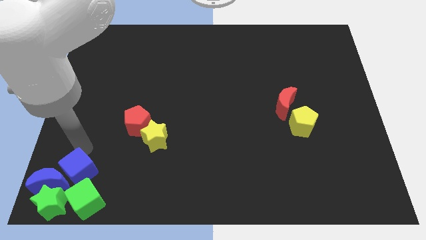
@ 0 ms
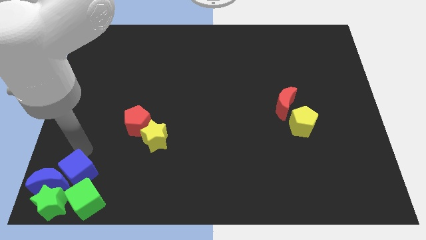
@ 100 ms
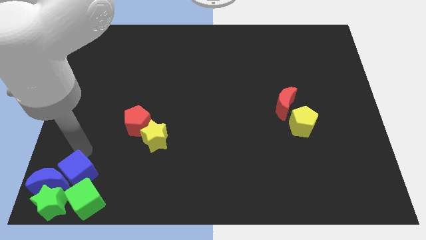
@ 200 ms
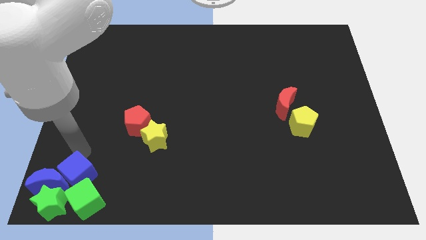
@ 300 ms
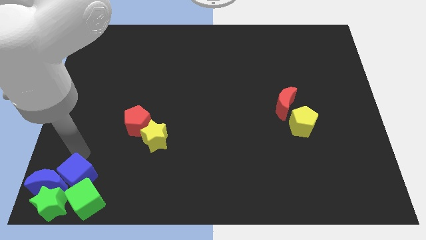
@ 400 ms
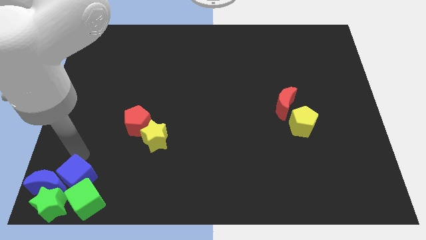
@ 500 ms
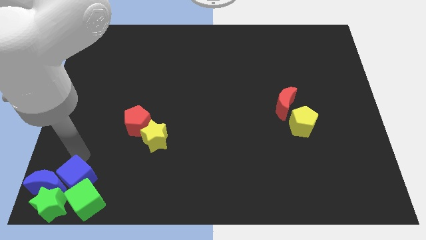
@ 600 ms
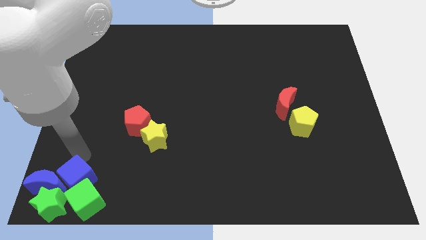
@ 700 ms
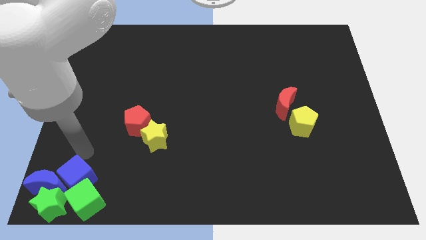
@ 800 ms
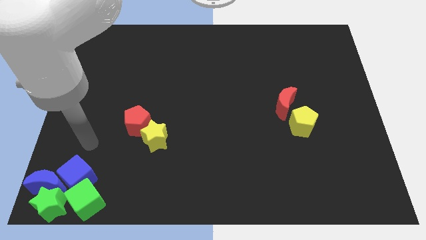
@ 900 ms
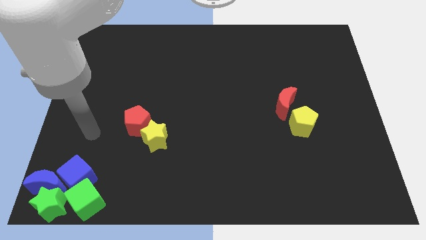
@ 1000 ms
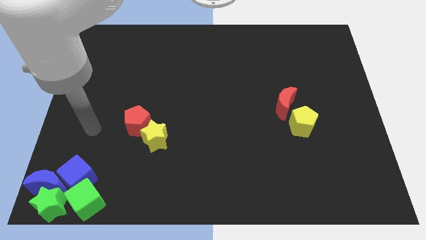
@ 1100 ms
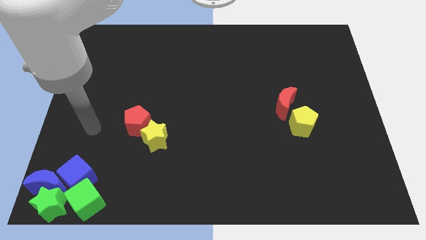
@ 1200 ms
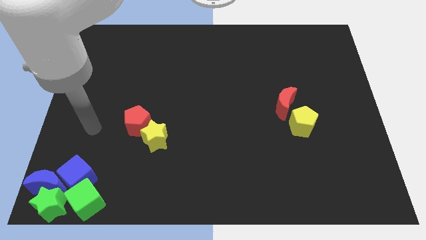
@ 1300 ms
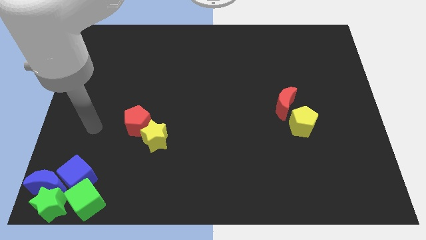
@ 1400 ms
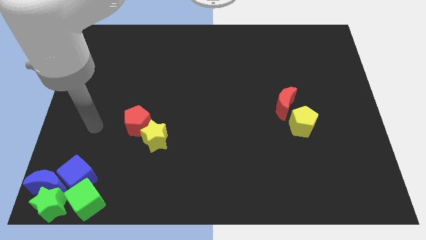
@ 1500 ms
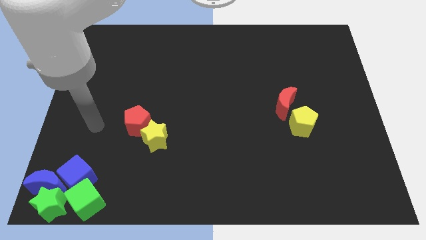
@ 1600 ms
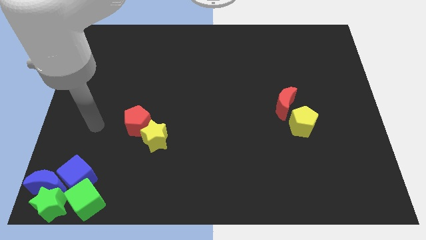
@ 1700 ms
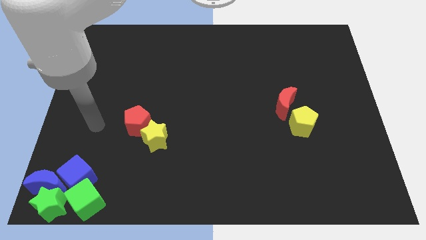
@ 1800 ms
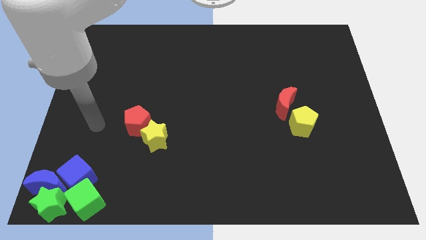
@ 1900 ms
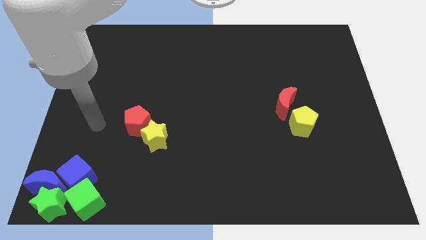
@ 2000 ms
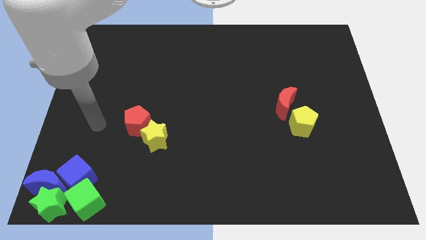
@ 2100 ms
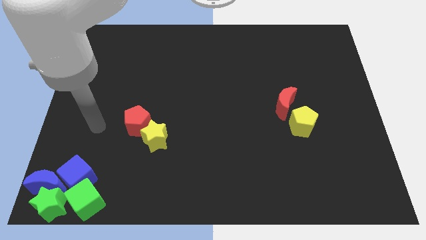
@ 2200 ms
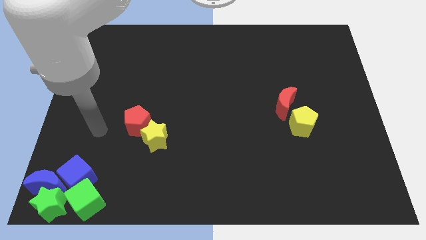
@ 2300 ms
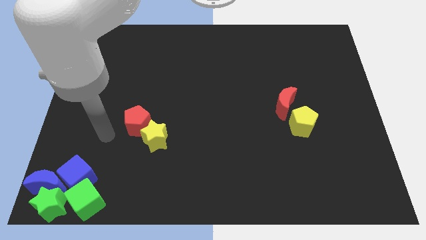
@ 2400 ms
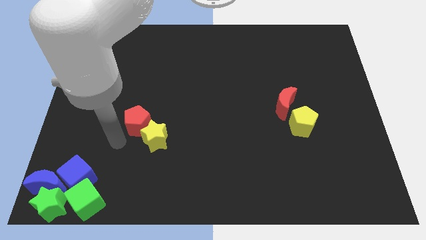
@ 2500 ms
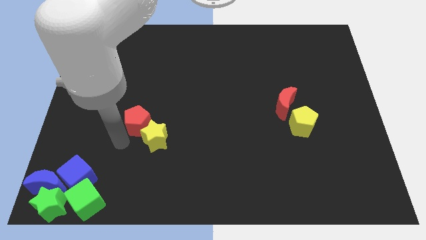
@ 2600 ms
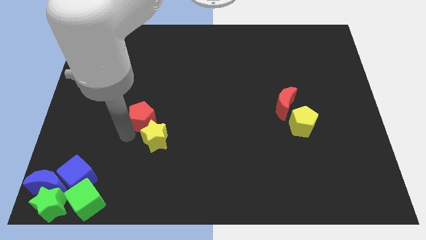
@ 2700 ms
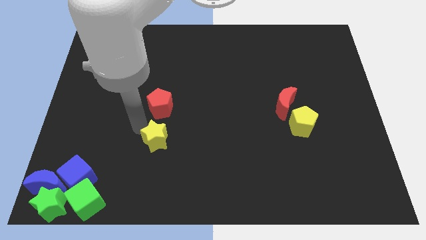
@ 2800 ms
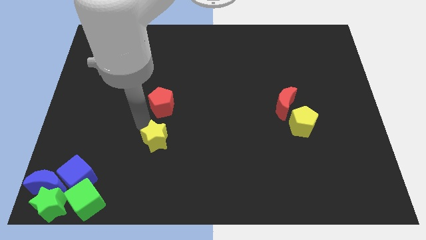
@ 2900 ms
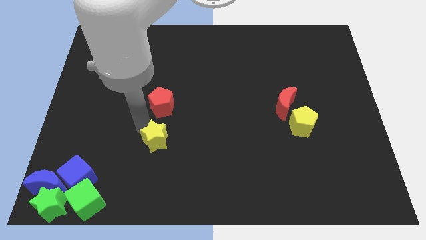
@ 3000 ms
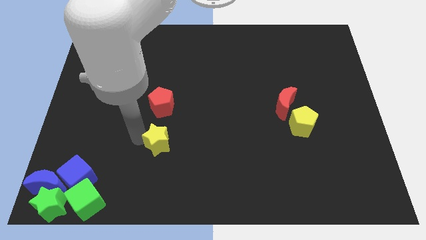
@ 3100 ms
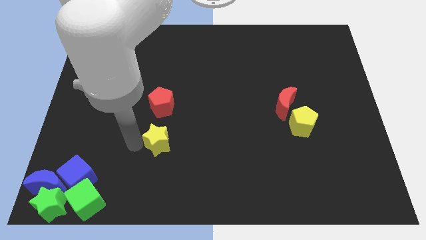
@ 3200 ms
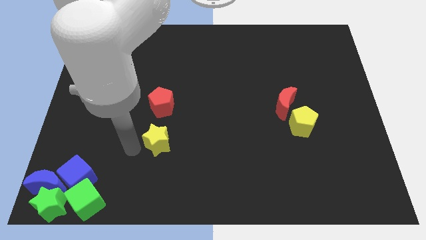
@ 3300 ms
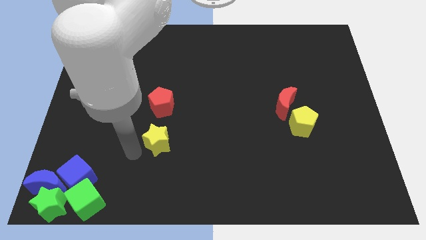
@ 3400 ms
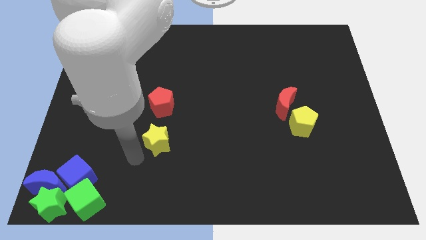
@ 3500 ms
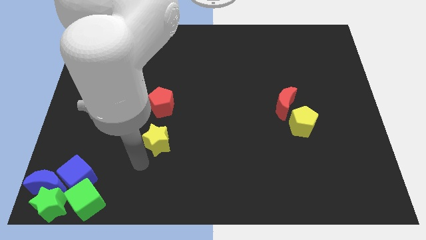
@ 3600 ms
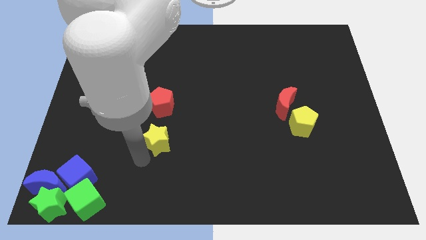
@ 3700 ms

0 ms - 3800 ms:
move the red pentagon slightly up

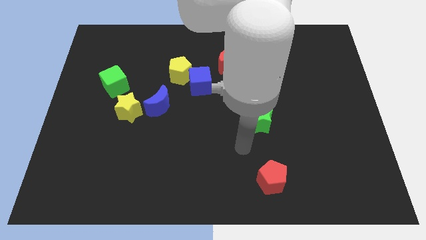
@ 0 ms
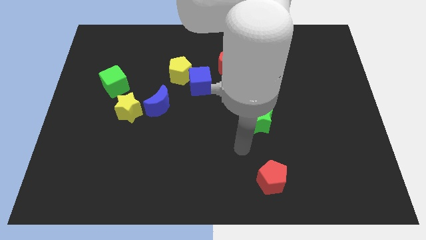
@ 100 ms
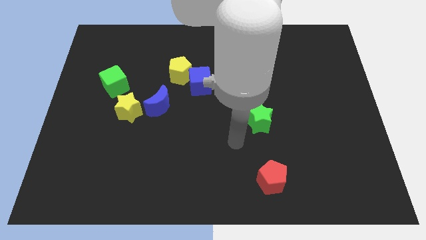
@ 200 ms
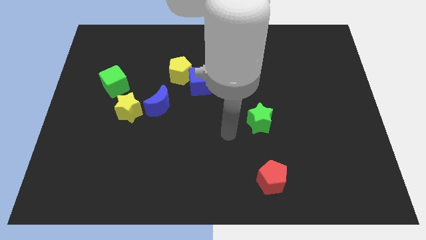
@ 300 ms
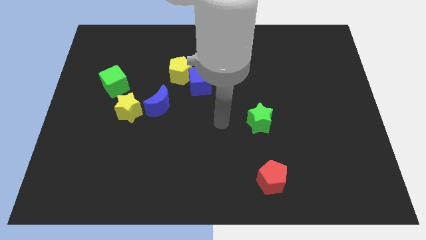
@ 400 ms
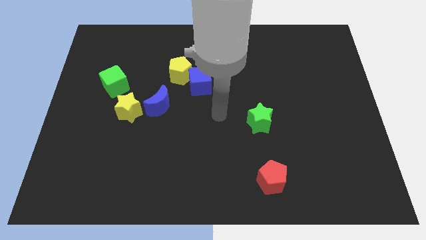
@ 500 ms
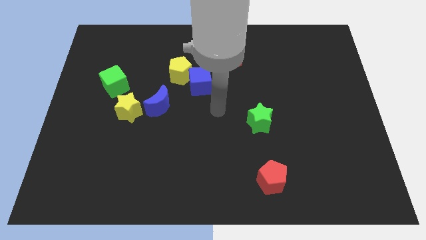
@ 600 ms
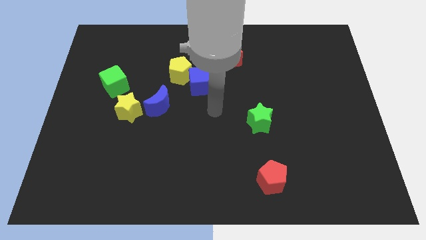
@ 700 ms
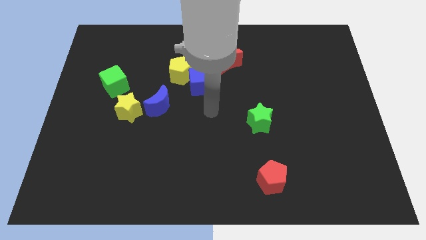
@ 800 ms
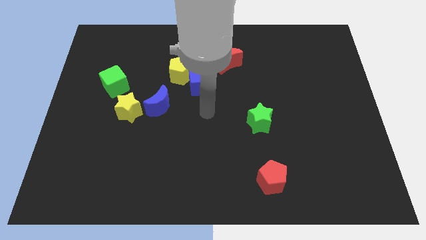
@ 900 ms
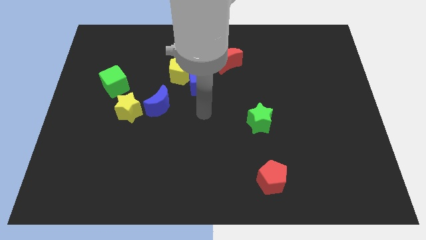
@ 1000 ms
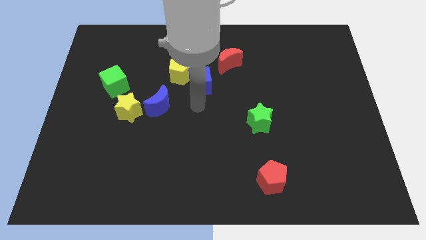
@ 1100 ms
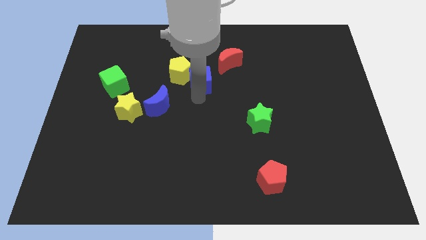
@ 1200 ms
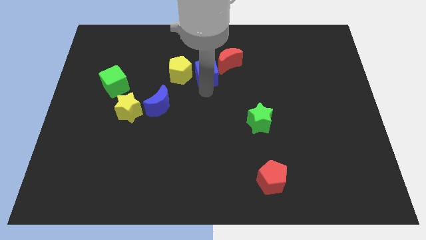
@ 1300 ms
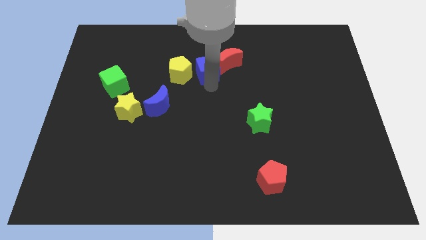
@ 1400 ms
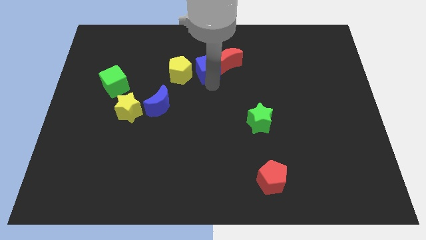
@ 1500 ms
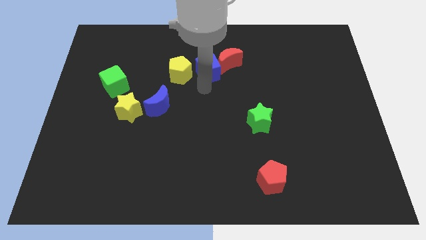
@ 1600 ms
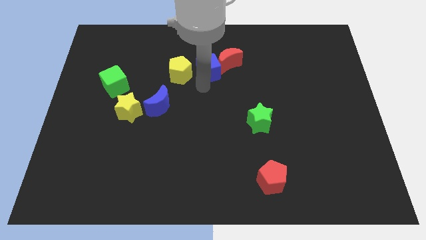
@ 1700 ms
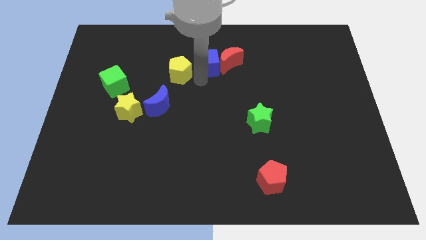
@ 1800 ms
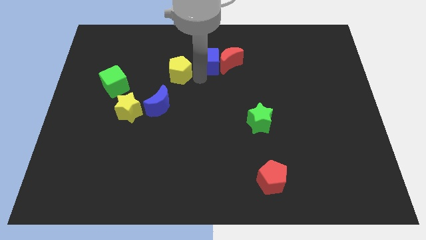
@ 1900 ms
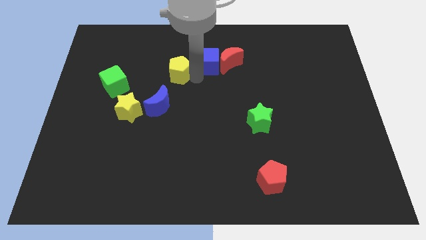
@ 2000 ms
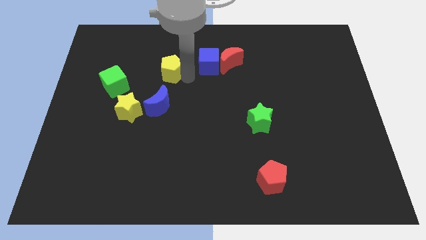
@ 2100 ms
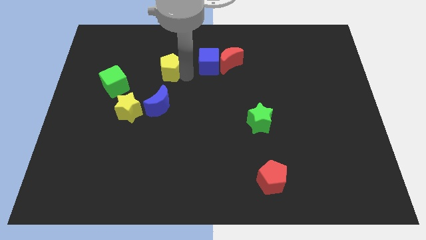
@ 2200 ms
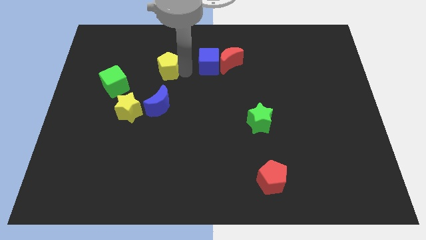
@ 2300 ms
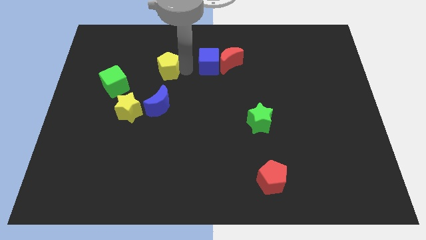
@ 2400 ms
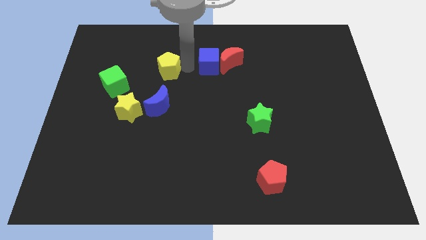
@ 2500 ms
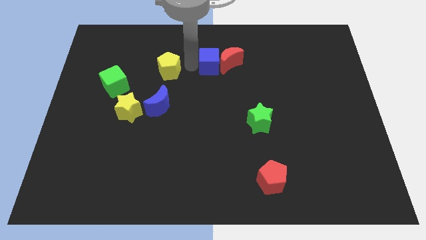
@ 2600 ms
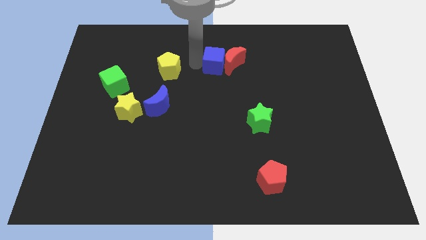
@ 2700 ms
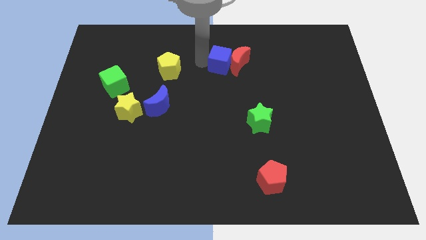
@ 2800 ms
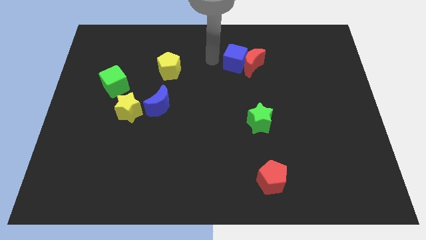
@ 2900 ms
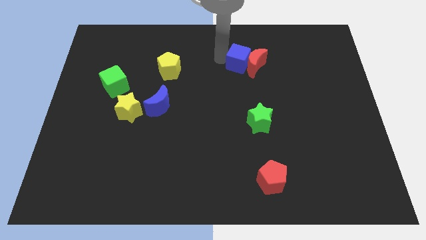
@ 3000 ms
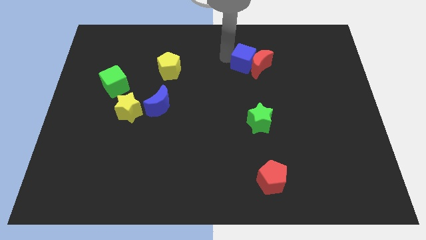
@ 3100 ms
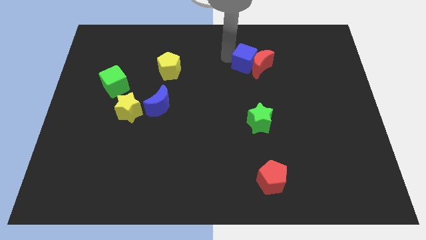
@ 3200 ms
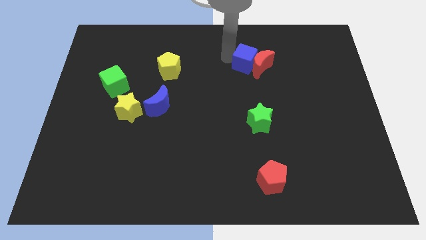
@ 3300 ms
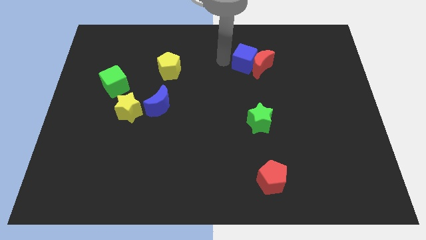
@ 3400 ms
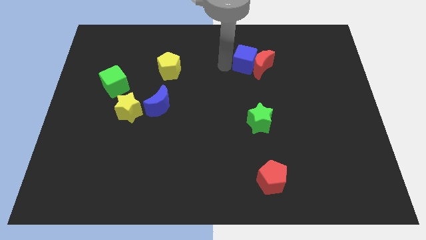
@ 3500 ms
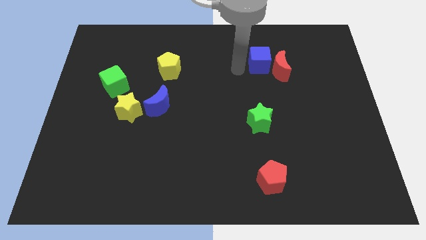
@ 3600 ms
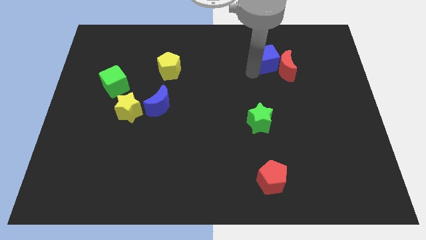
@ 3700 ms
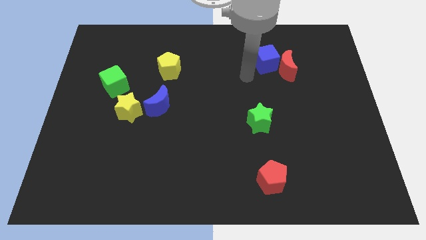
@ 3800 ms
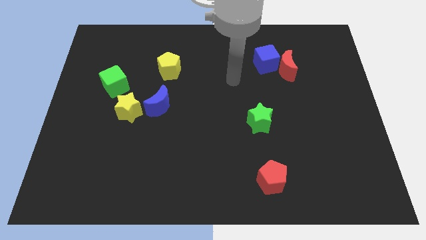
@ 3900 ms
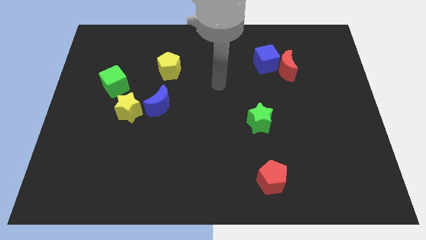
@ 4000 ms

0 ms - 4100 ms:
separate the yellow pentagon from the red crescent and the blue cube

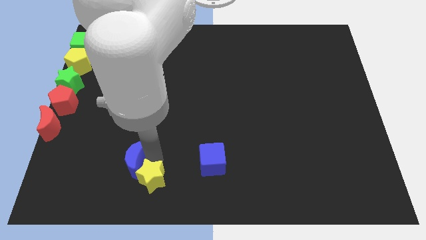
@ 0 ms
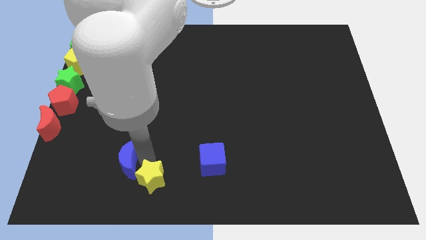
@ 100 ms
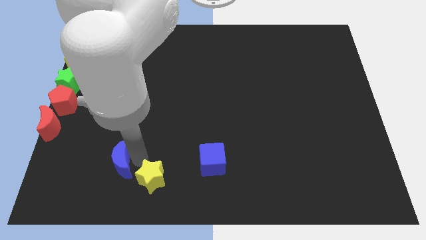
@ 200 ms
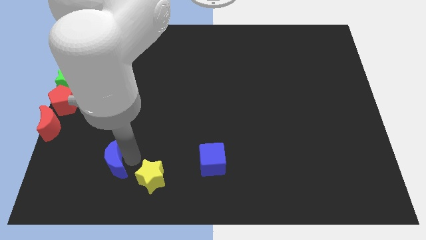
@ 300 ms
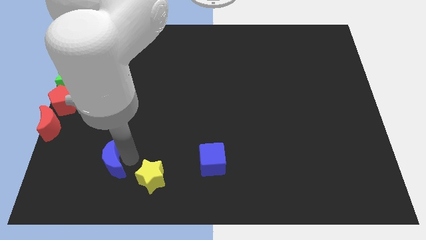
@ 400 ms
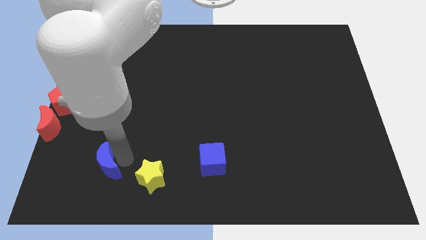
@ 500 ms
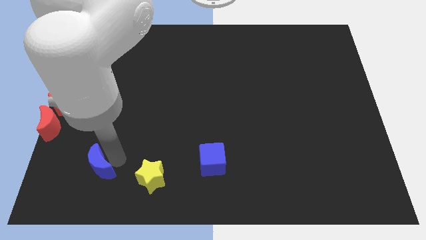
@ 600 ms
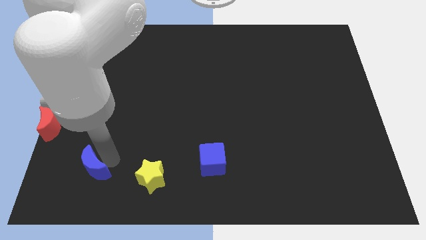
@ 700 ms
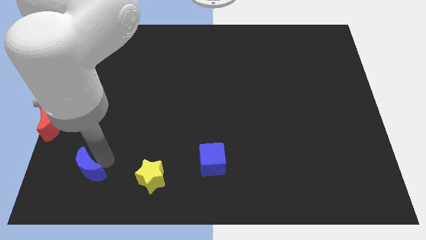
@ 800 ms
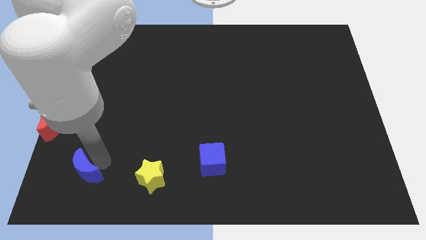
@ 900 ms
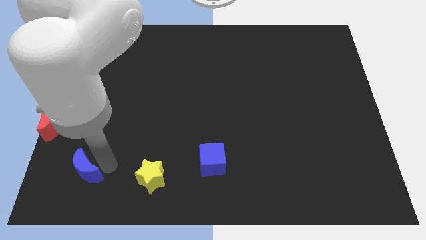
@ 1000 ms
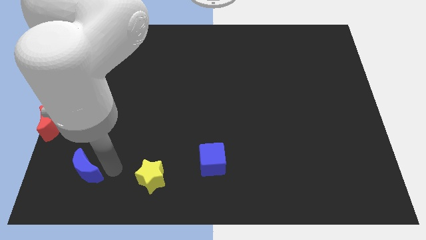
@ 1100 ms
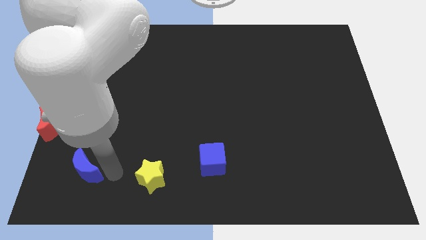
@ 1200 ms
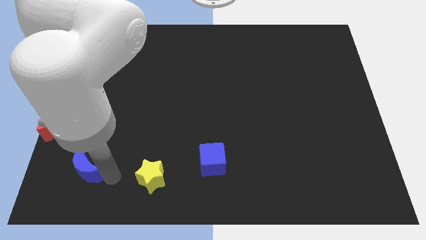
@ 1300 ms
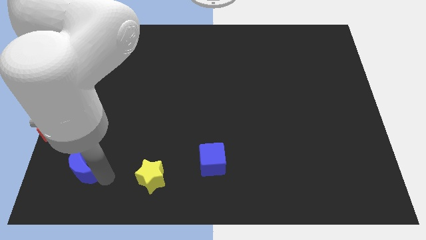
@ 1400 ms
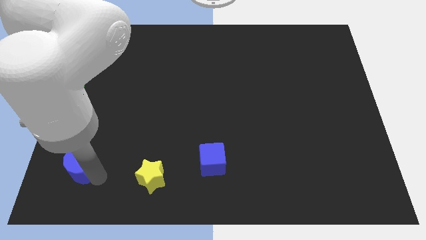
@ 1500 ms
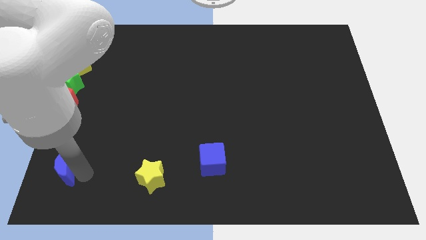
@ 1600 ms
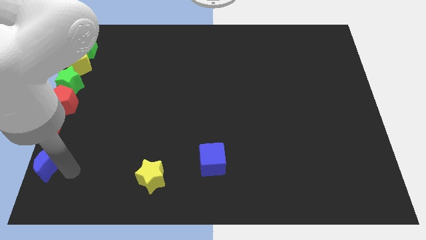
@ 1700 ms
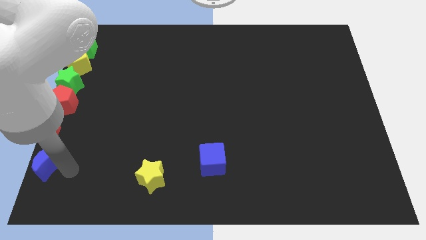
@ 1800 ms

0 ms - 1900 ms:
separate the blue semicircle from the yellow star
